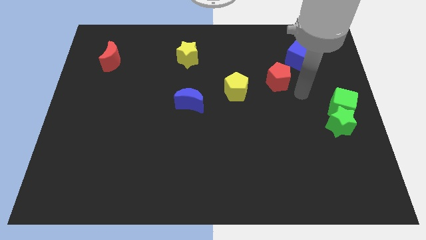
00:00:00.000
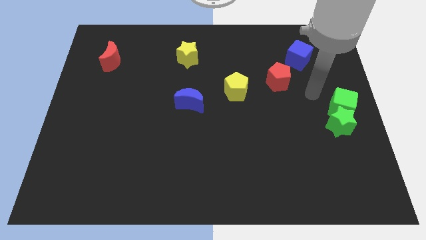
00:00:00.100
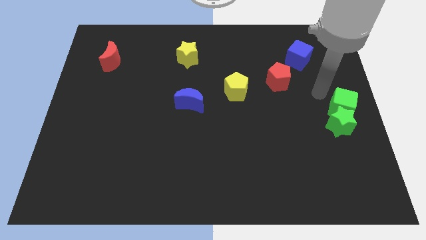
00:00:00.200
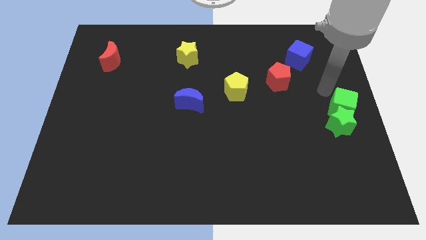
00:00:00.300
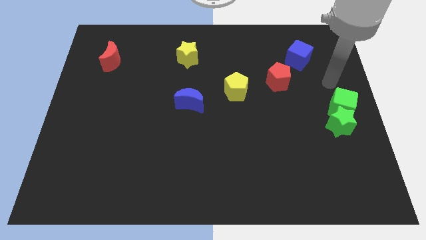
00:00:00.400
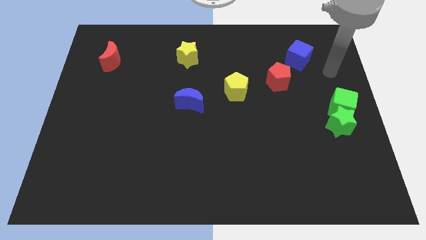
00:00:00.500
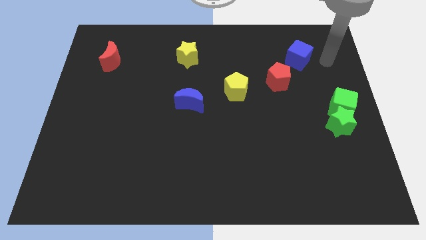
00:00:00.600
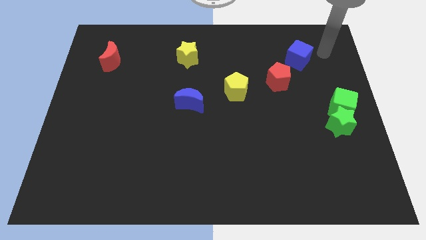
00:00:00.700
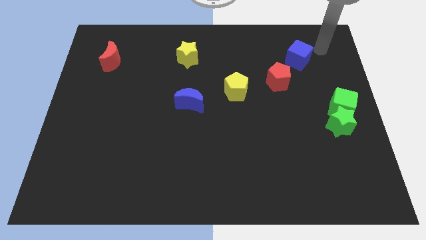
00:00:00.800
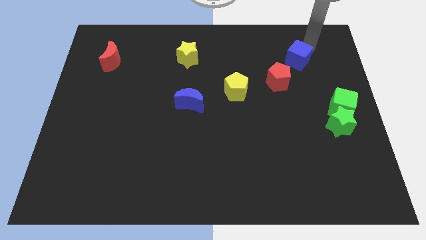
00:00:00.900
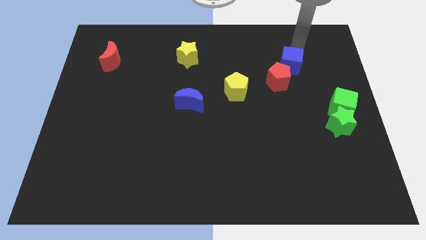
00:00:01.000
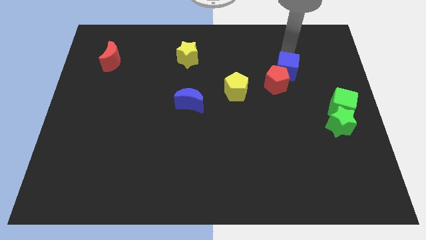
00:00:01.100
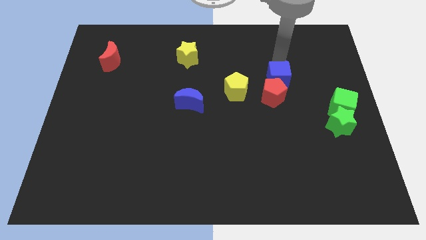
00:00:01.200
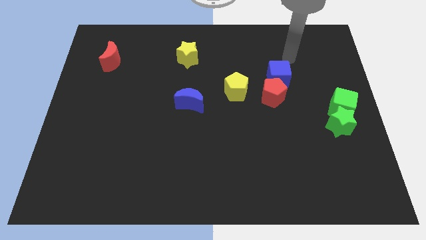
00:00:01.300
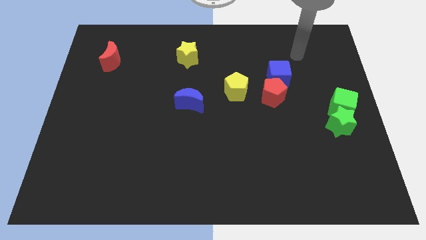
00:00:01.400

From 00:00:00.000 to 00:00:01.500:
push the blue cube into the red pentagon

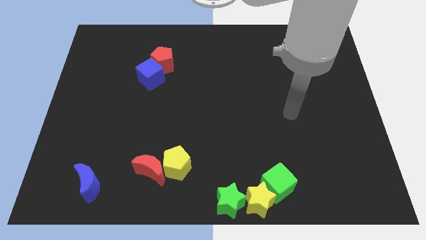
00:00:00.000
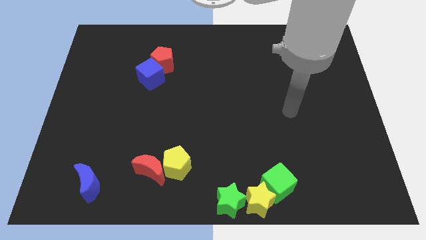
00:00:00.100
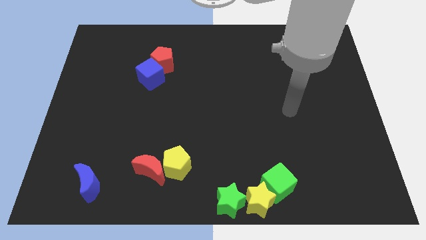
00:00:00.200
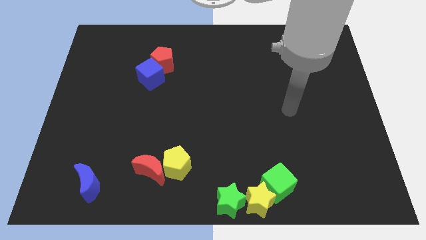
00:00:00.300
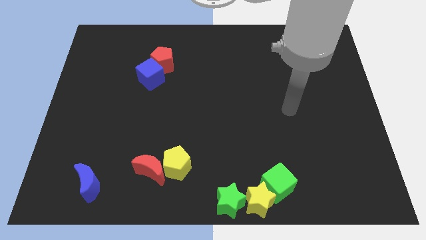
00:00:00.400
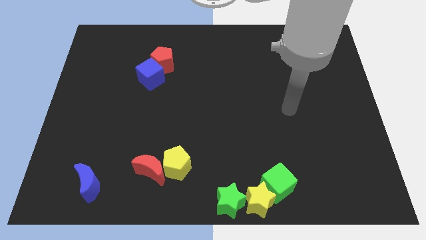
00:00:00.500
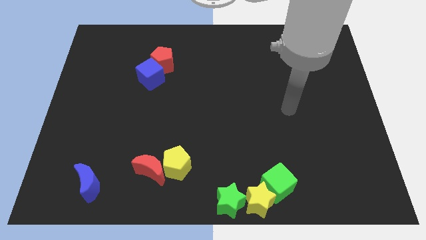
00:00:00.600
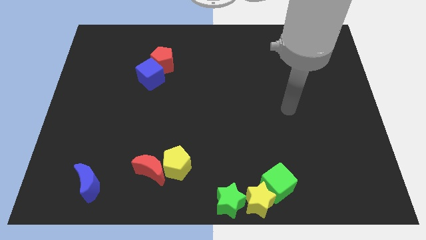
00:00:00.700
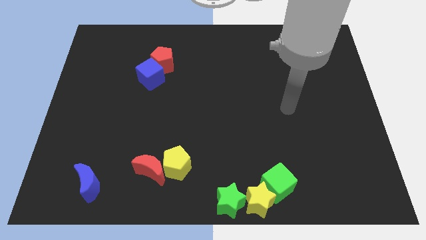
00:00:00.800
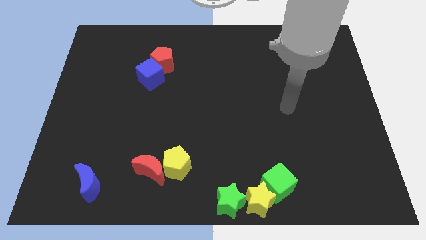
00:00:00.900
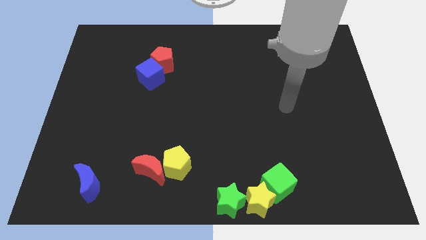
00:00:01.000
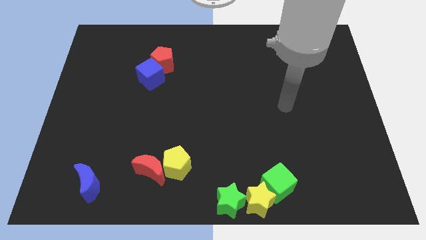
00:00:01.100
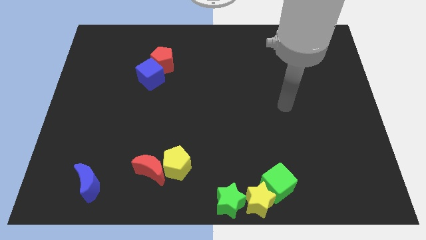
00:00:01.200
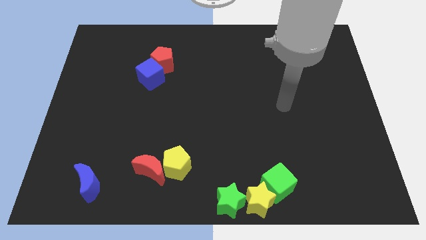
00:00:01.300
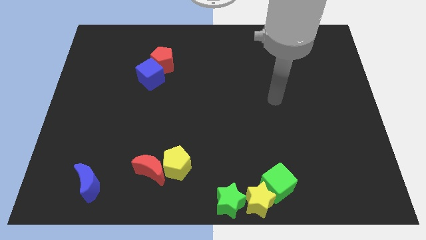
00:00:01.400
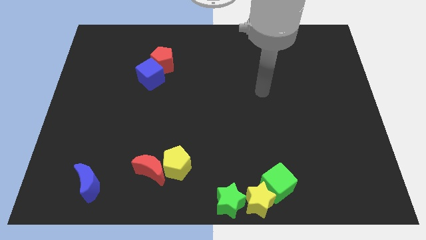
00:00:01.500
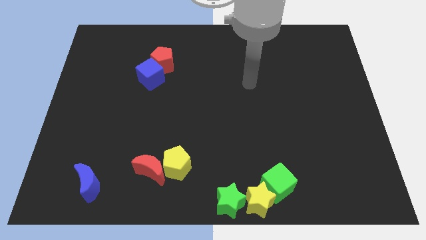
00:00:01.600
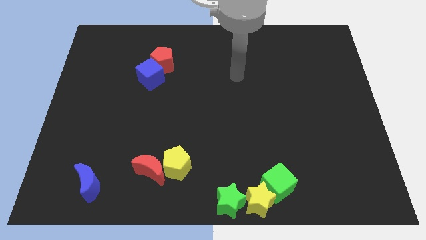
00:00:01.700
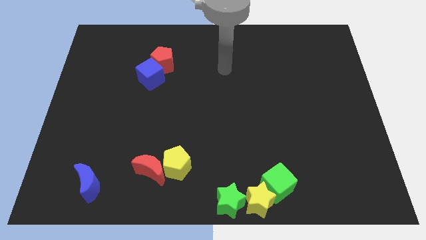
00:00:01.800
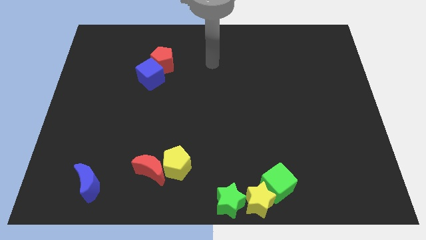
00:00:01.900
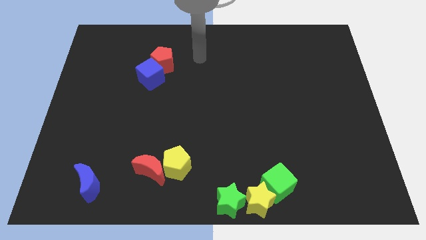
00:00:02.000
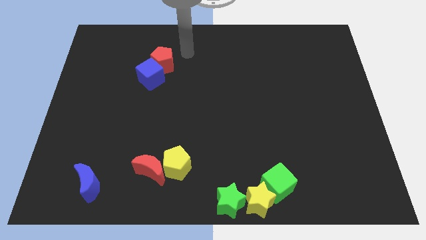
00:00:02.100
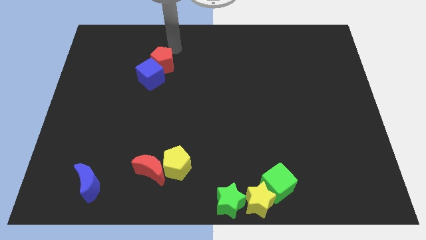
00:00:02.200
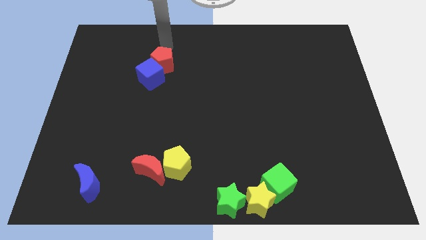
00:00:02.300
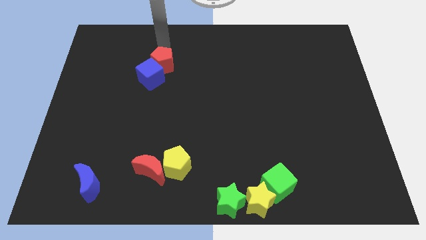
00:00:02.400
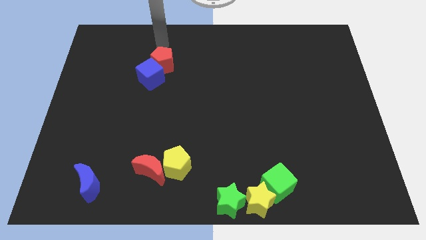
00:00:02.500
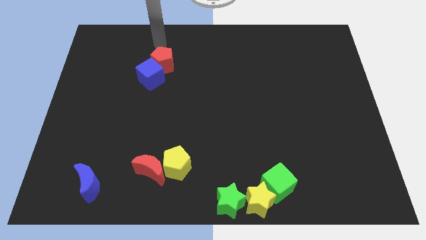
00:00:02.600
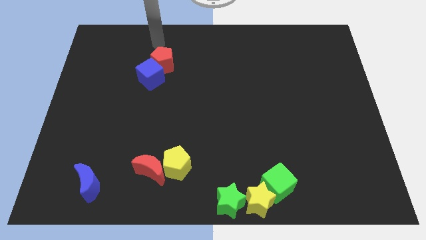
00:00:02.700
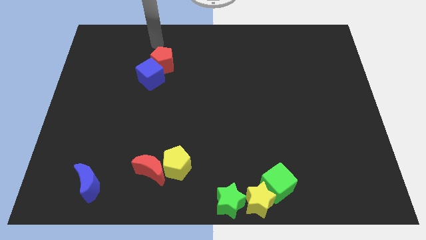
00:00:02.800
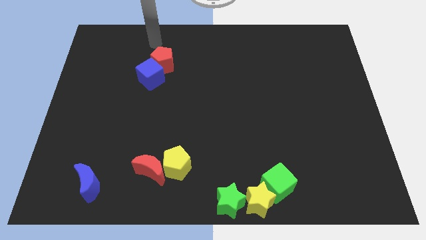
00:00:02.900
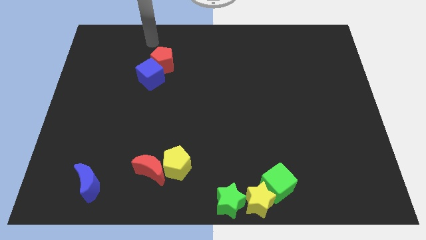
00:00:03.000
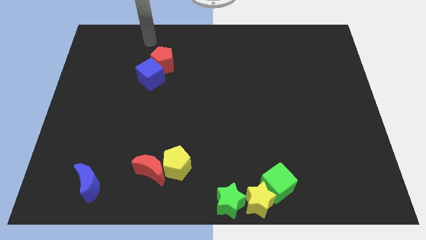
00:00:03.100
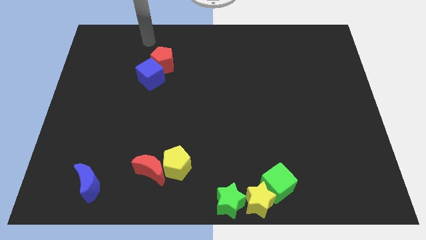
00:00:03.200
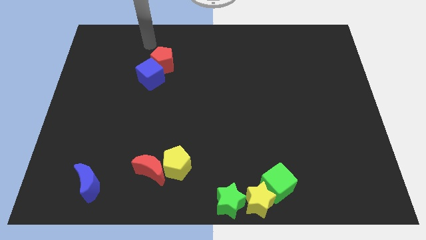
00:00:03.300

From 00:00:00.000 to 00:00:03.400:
place arm on the top of red pentagon

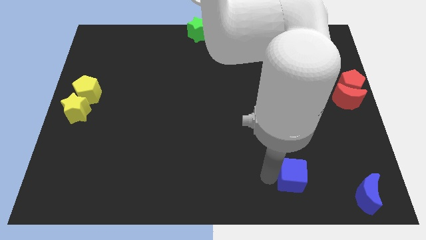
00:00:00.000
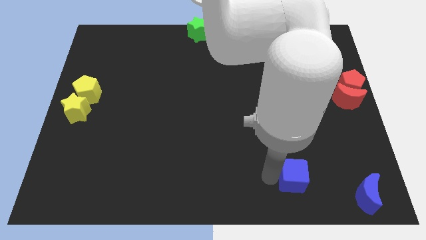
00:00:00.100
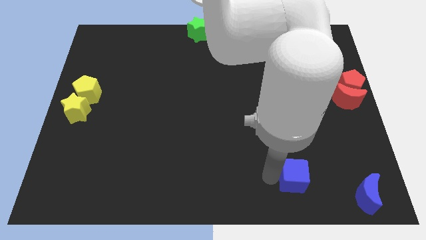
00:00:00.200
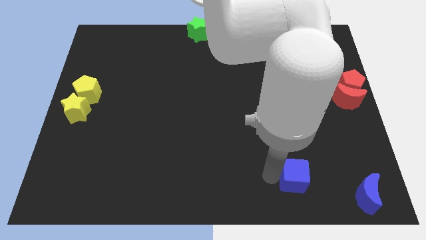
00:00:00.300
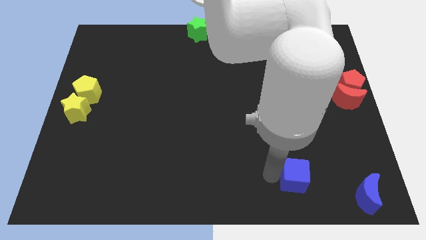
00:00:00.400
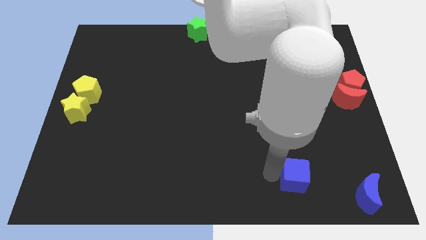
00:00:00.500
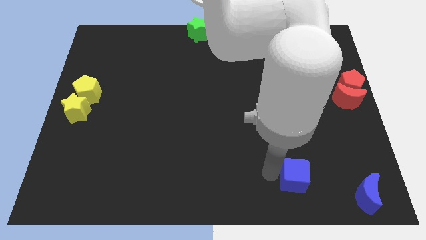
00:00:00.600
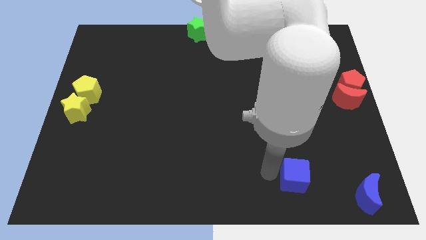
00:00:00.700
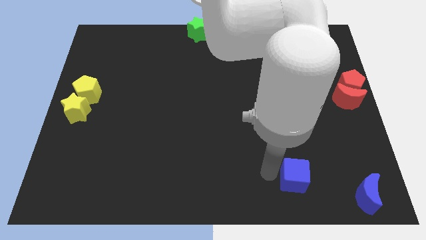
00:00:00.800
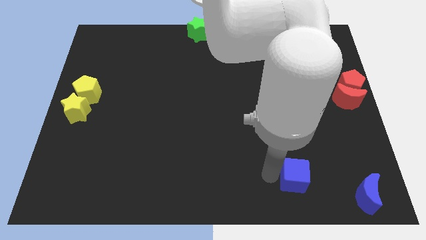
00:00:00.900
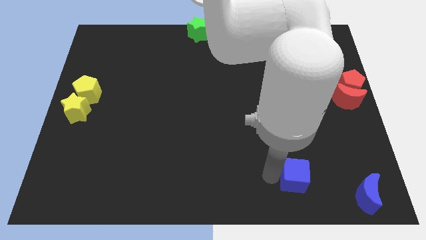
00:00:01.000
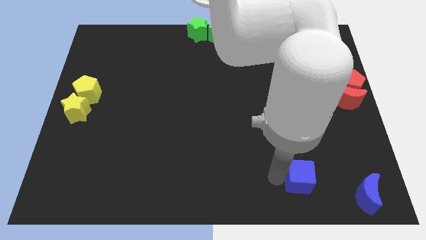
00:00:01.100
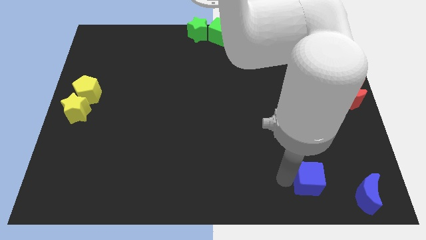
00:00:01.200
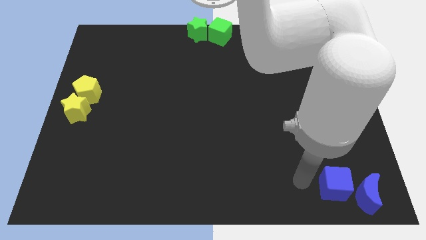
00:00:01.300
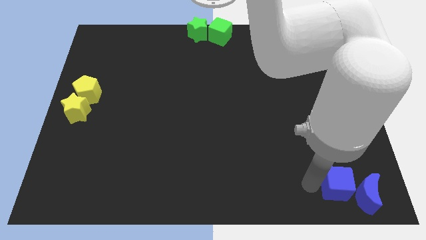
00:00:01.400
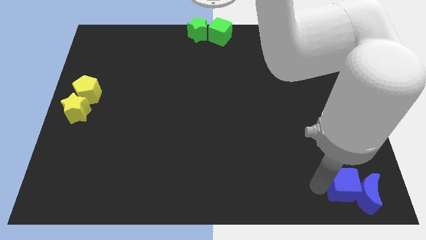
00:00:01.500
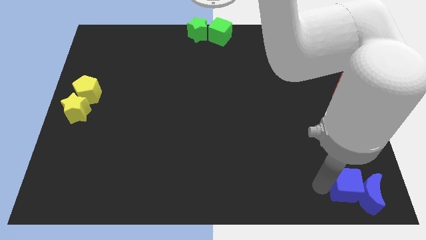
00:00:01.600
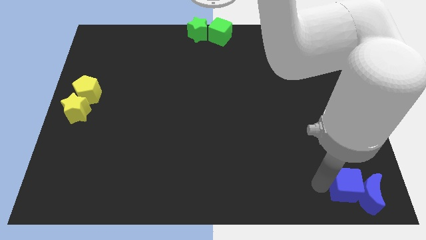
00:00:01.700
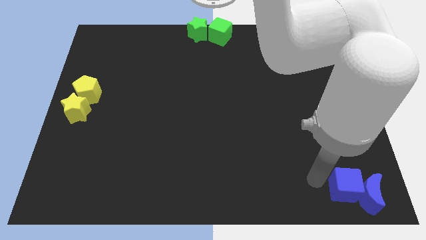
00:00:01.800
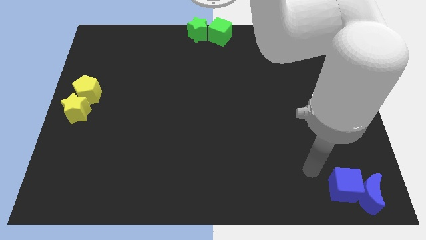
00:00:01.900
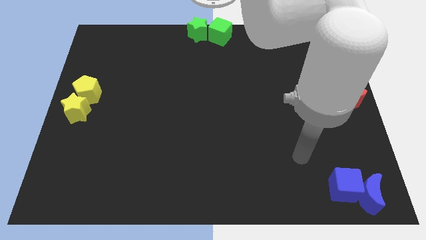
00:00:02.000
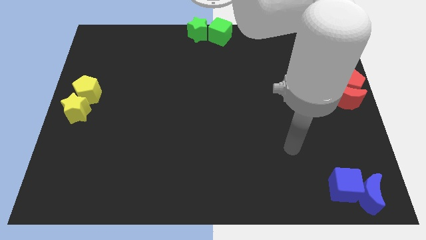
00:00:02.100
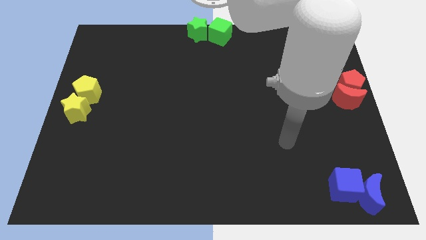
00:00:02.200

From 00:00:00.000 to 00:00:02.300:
push the blue cube into the blue moon

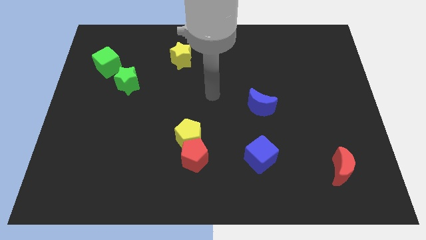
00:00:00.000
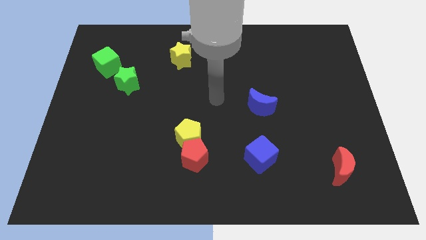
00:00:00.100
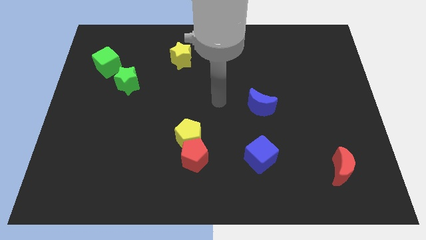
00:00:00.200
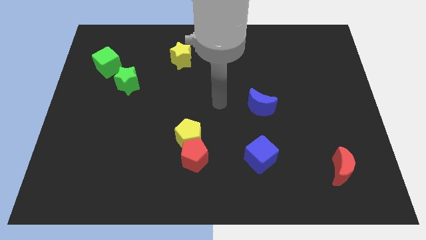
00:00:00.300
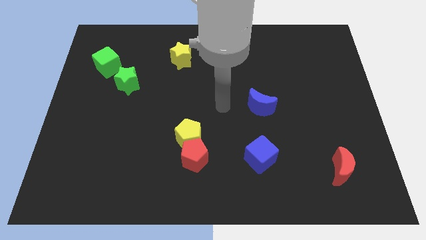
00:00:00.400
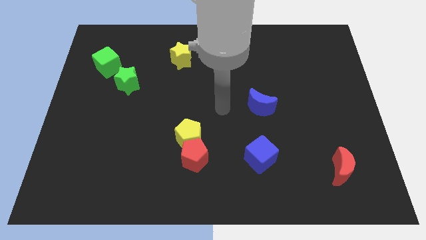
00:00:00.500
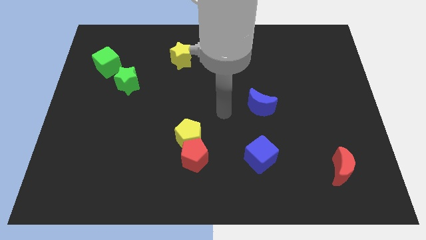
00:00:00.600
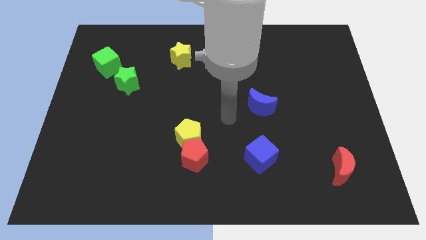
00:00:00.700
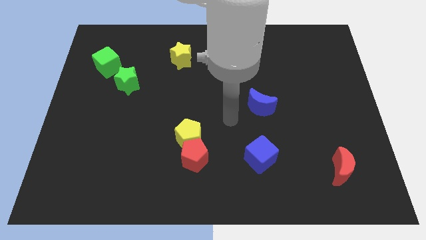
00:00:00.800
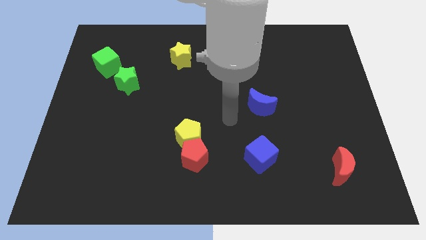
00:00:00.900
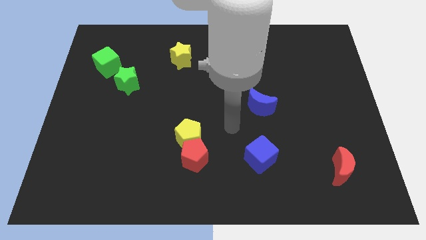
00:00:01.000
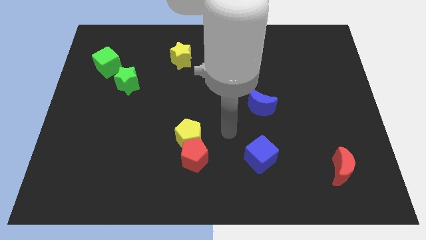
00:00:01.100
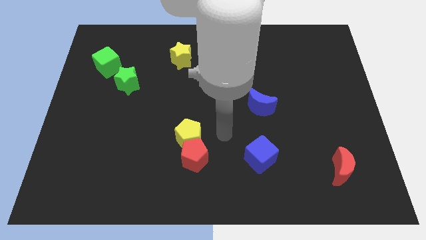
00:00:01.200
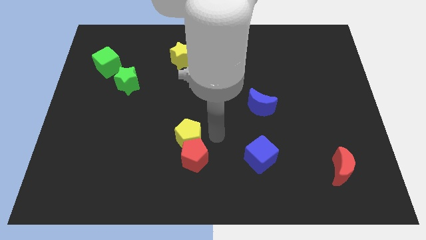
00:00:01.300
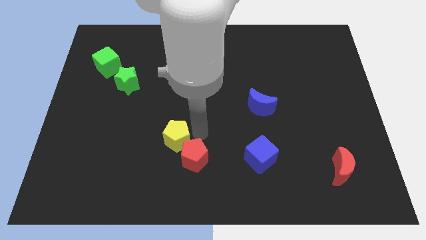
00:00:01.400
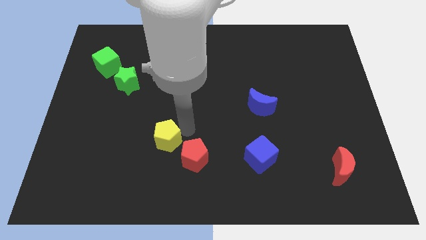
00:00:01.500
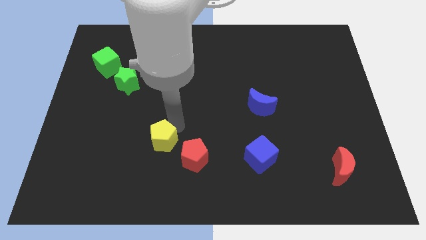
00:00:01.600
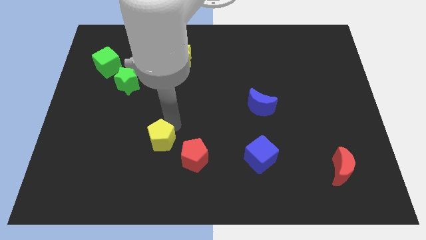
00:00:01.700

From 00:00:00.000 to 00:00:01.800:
move the yellow pentagon to the top left side of the red pentagon
